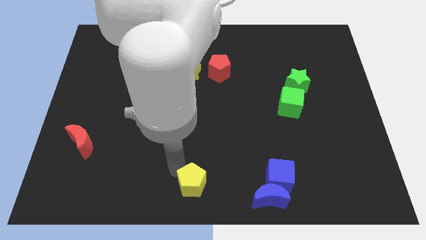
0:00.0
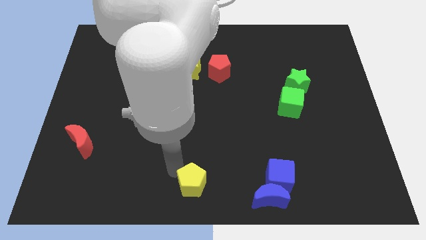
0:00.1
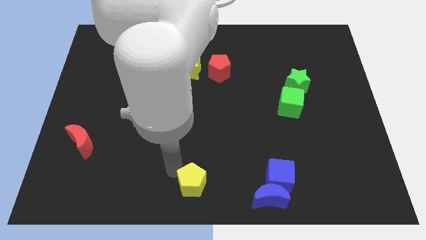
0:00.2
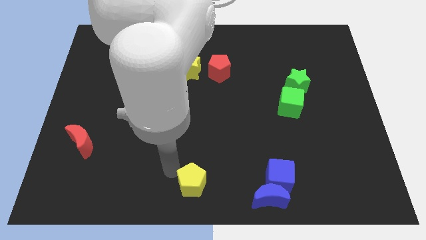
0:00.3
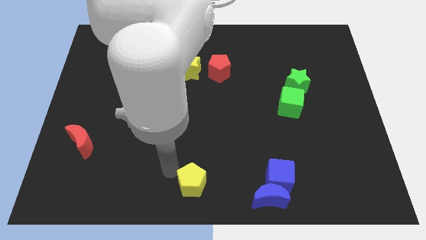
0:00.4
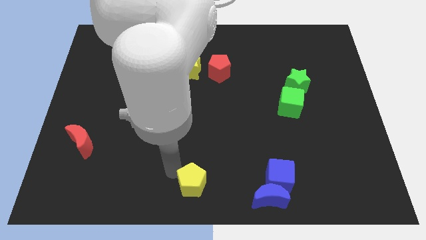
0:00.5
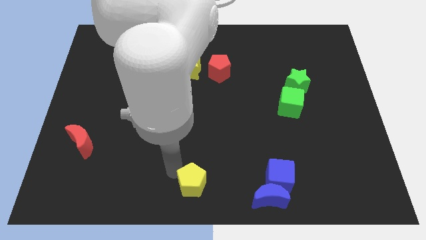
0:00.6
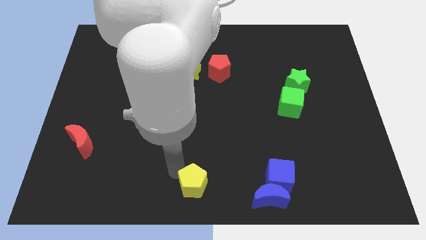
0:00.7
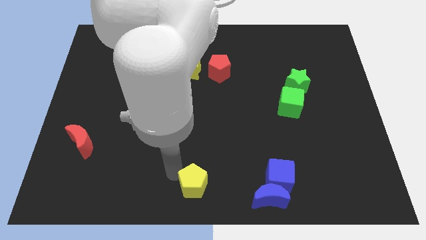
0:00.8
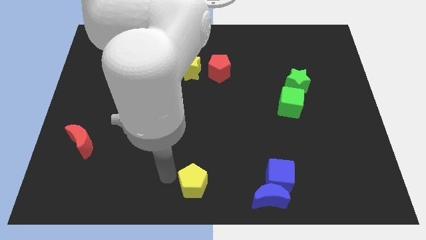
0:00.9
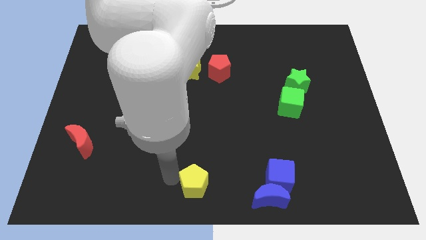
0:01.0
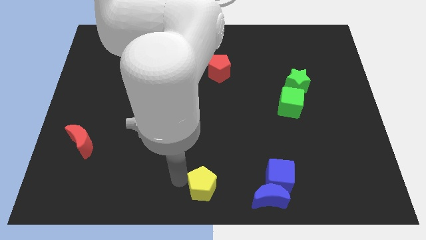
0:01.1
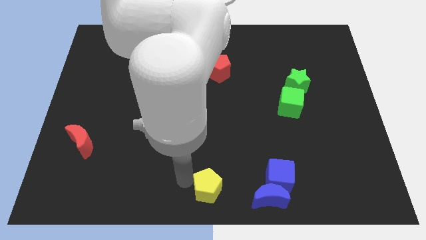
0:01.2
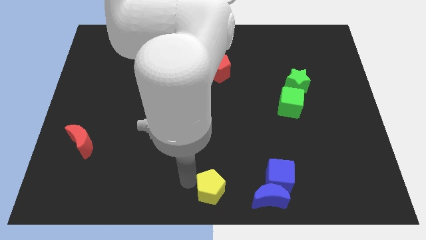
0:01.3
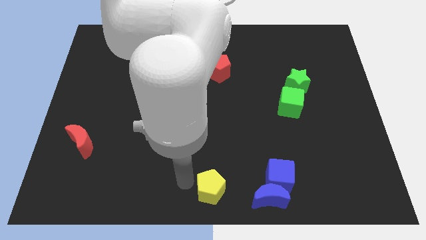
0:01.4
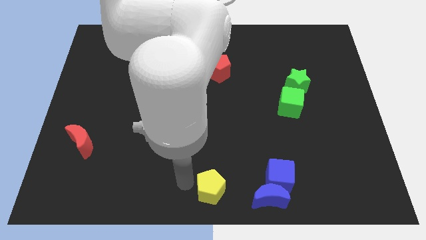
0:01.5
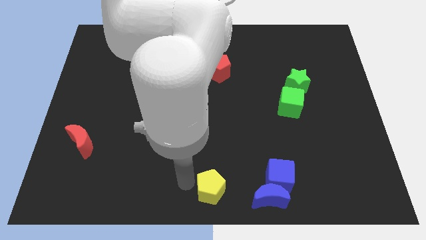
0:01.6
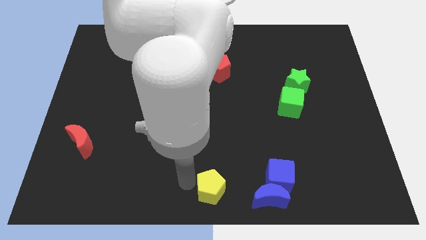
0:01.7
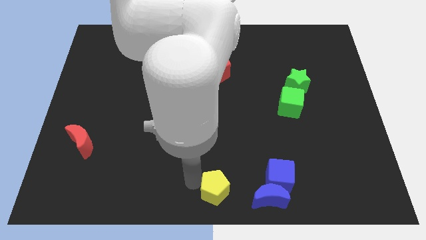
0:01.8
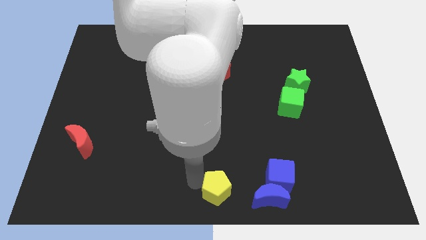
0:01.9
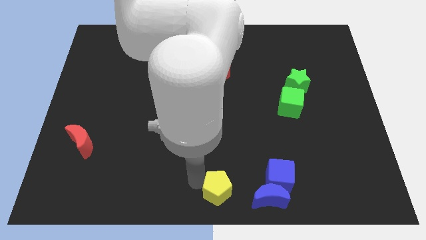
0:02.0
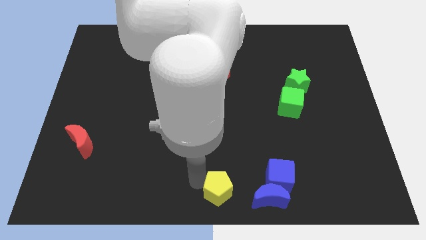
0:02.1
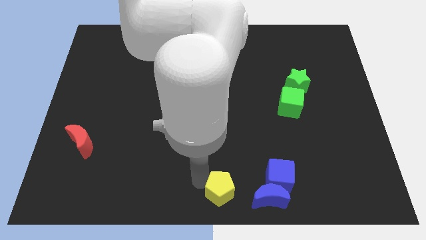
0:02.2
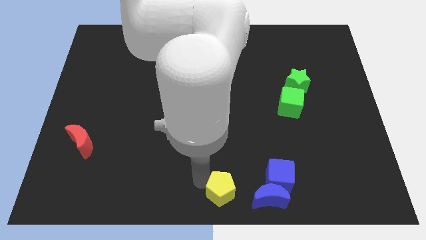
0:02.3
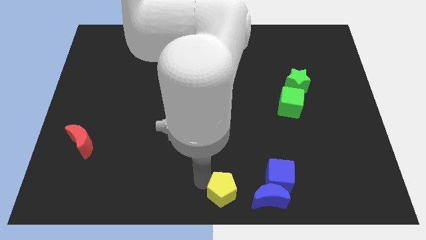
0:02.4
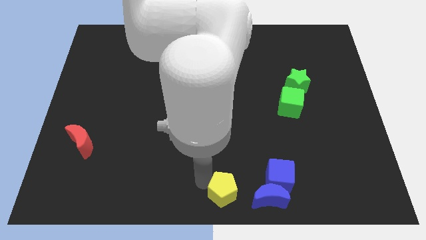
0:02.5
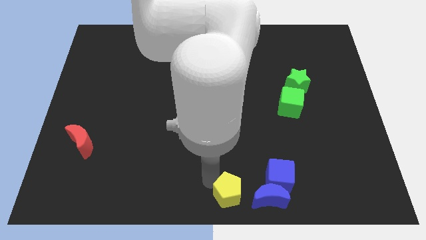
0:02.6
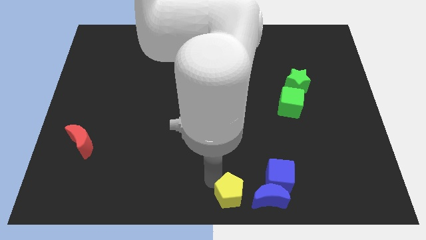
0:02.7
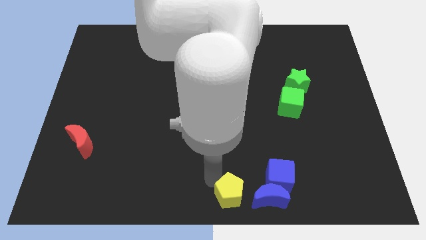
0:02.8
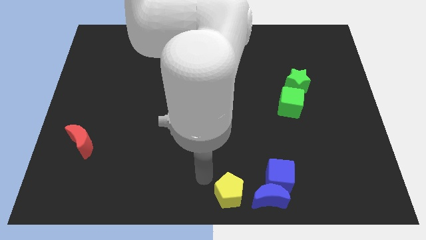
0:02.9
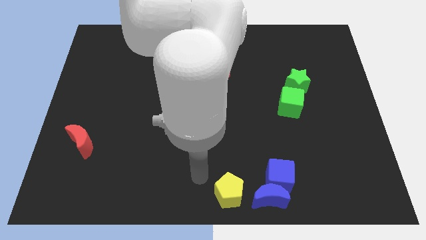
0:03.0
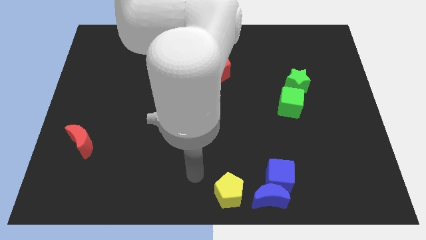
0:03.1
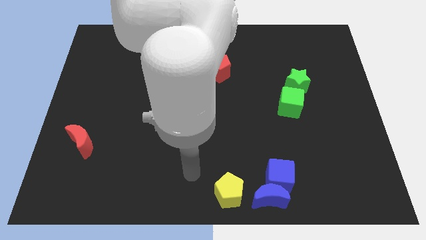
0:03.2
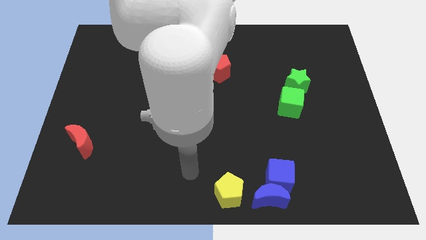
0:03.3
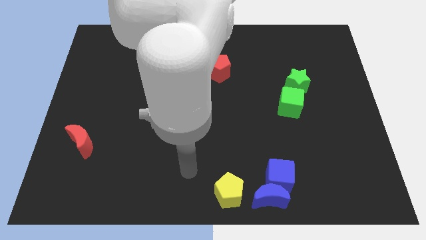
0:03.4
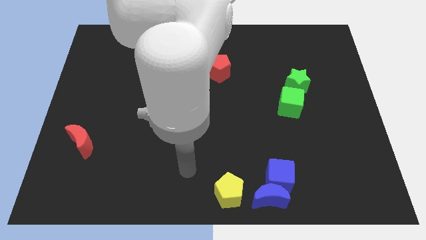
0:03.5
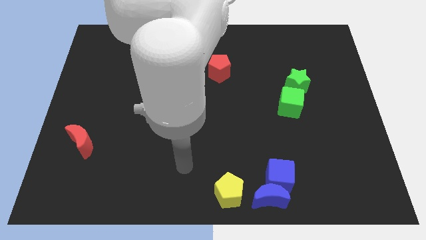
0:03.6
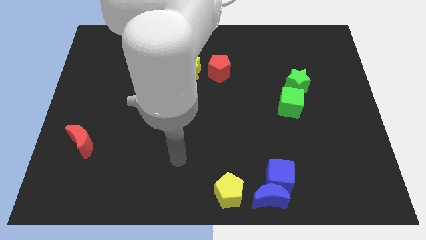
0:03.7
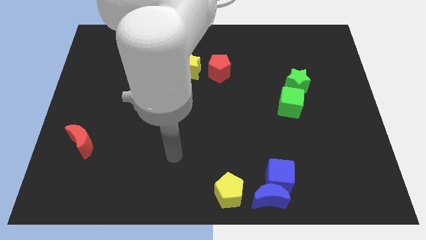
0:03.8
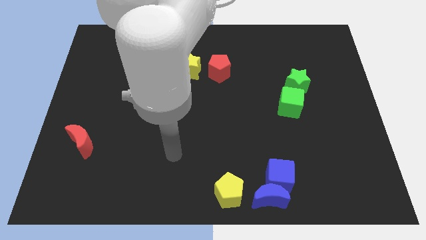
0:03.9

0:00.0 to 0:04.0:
put the yellow pentagon on the left side of the blue crescent

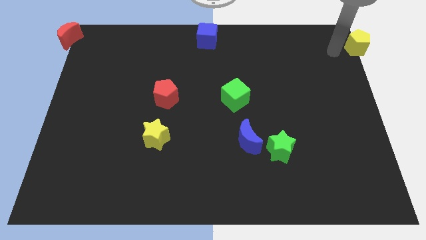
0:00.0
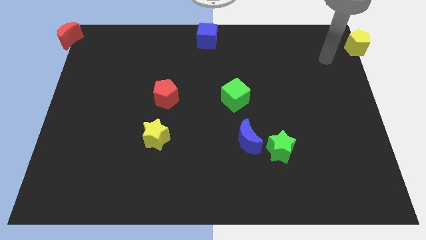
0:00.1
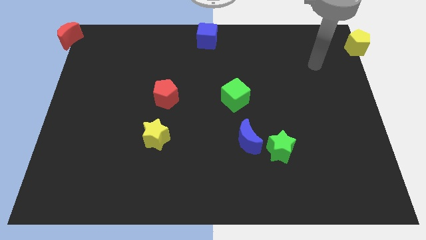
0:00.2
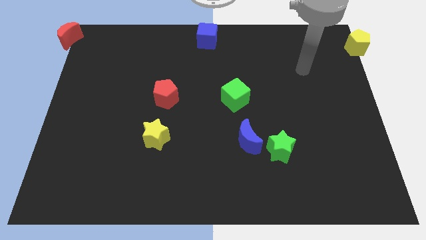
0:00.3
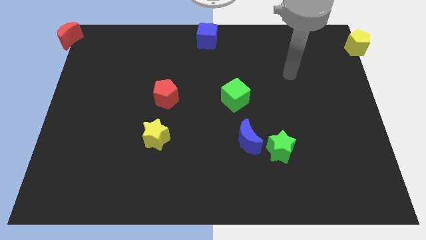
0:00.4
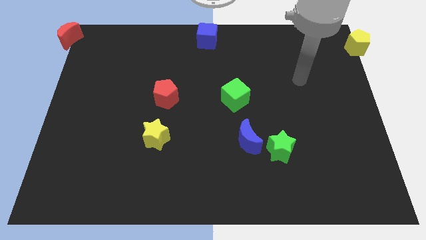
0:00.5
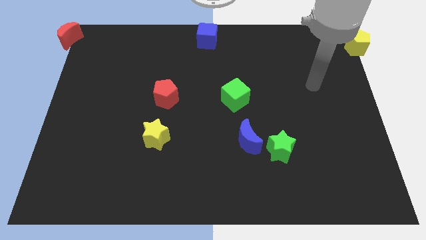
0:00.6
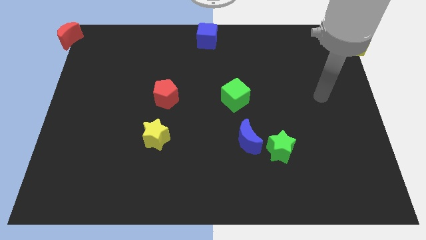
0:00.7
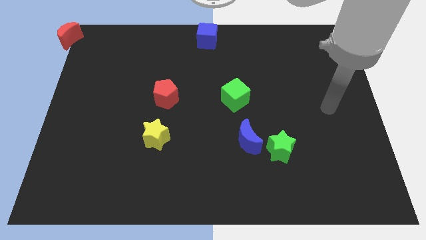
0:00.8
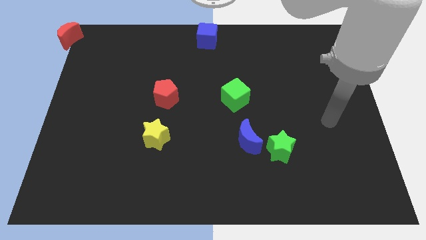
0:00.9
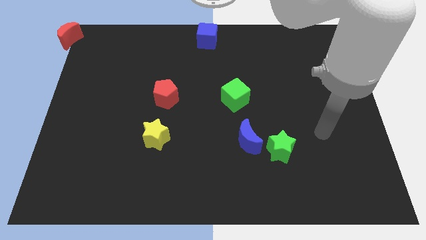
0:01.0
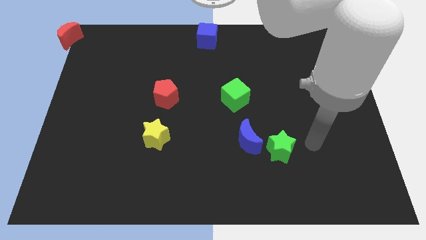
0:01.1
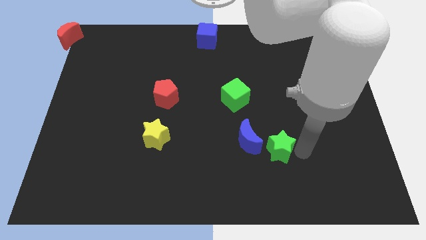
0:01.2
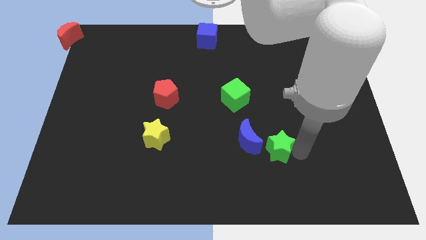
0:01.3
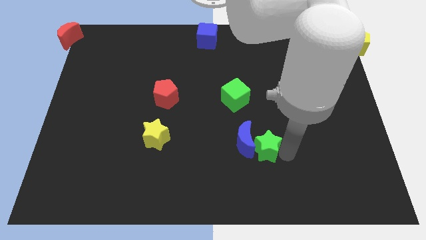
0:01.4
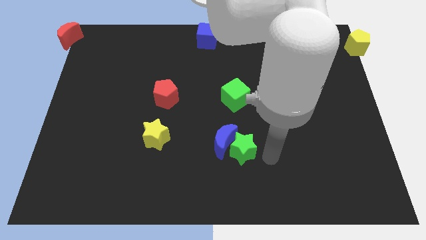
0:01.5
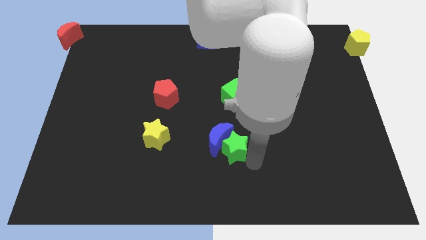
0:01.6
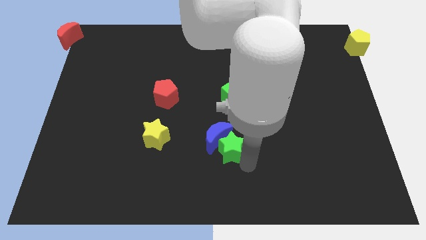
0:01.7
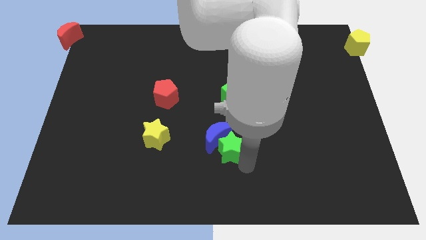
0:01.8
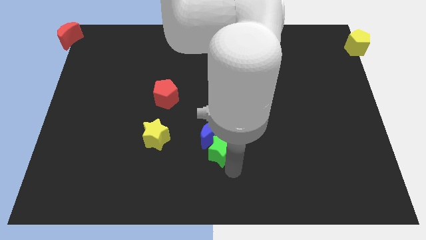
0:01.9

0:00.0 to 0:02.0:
push the green star into the blue crescent

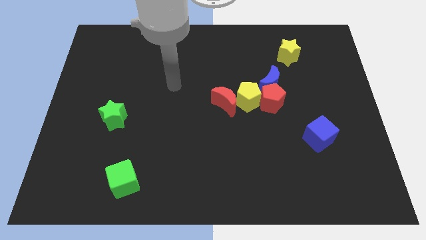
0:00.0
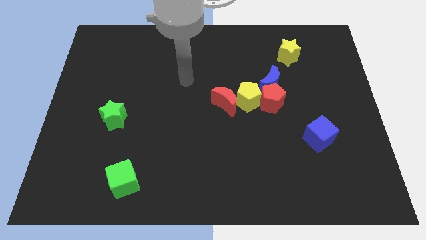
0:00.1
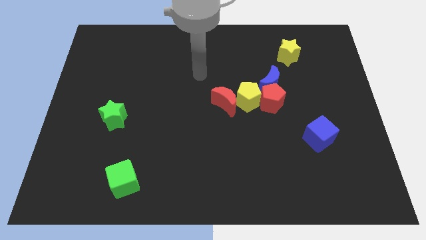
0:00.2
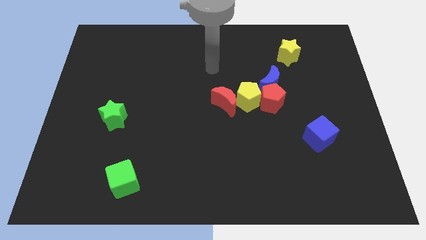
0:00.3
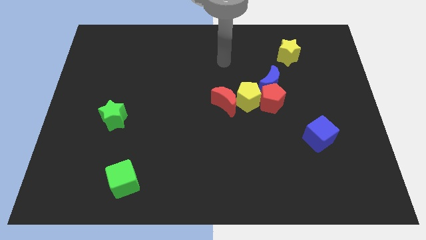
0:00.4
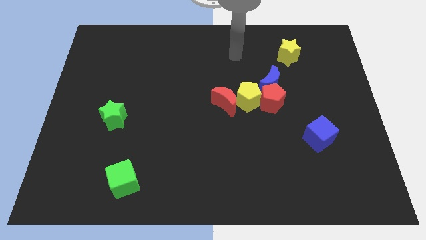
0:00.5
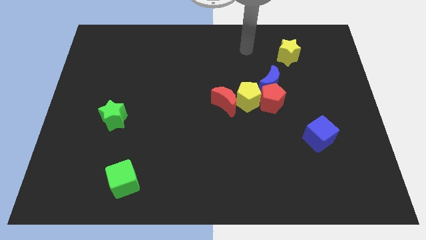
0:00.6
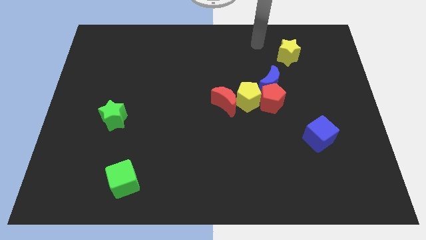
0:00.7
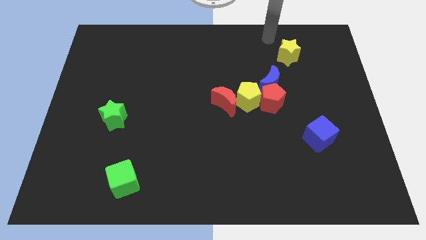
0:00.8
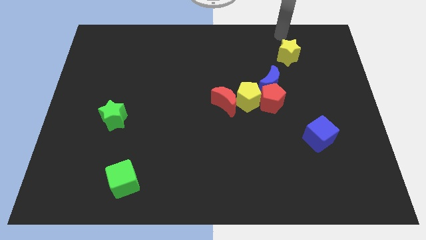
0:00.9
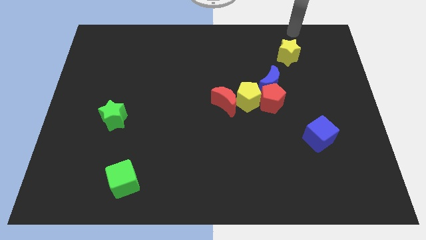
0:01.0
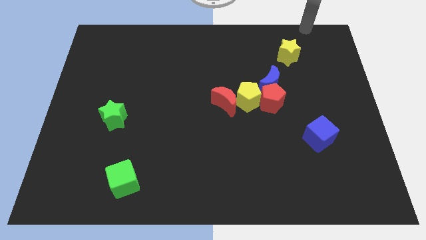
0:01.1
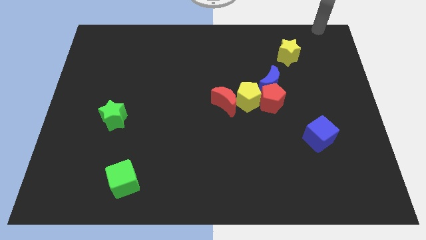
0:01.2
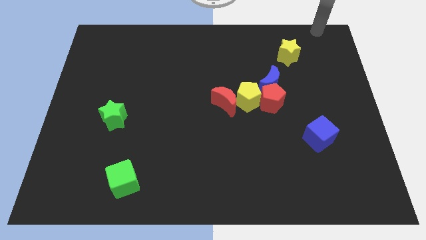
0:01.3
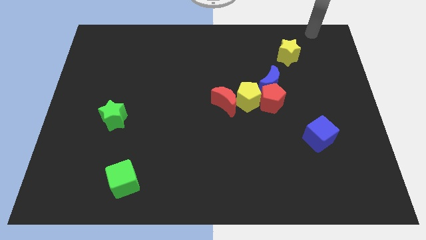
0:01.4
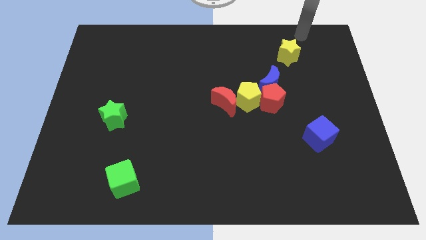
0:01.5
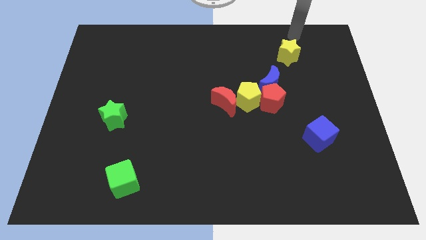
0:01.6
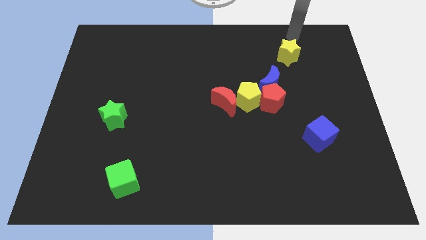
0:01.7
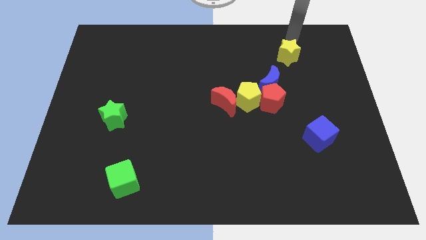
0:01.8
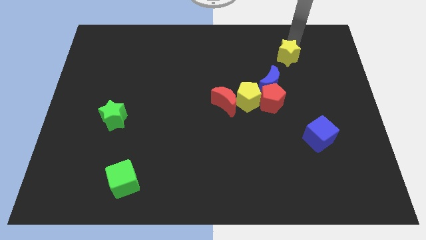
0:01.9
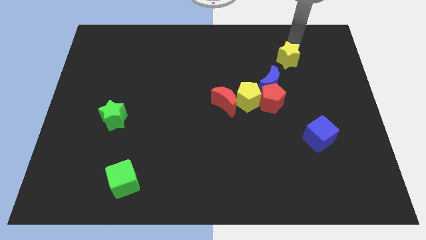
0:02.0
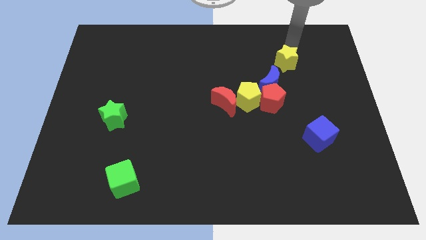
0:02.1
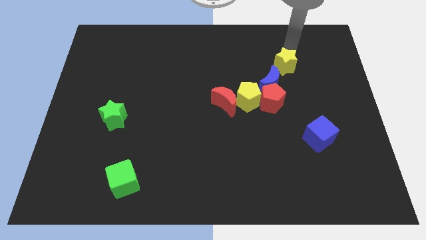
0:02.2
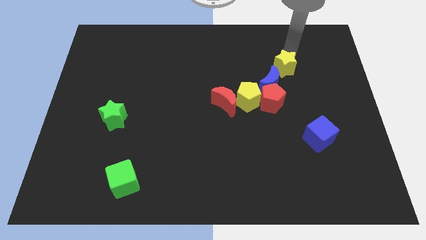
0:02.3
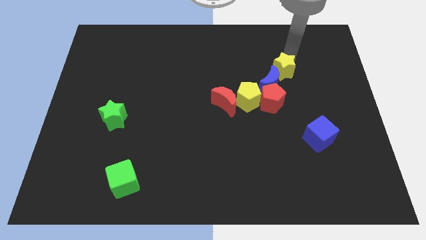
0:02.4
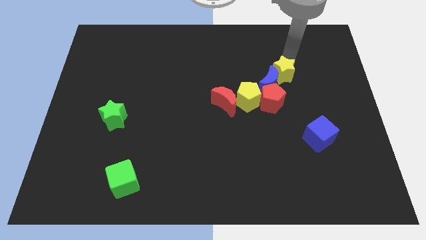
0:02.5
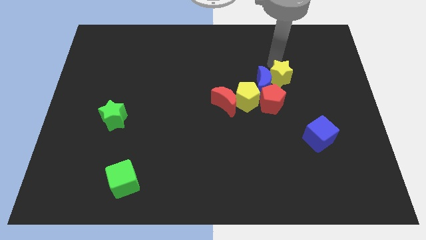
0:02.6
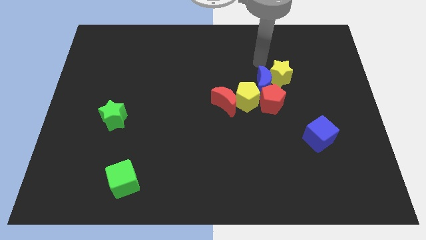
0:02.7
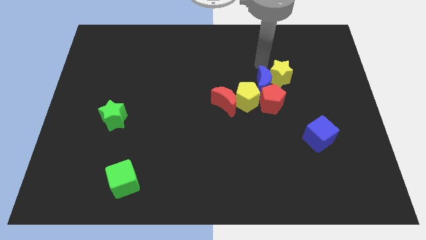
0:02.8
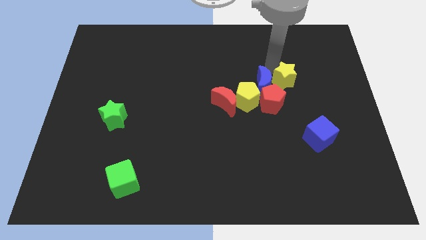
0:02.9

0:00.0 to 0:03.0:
push the yellow star into the blue moon
